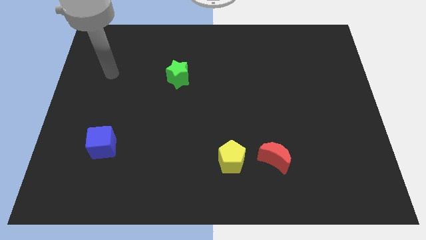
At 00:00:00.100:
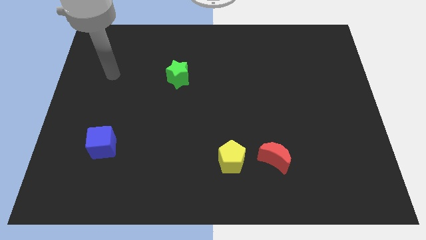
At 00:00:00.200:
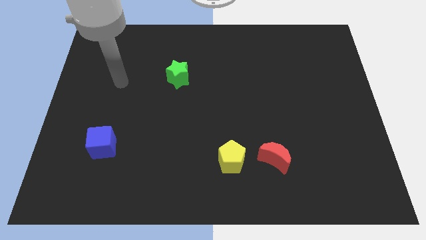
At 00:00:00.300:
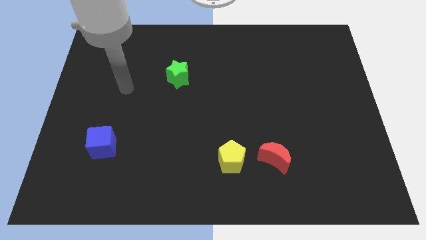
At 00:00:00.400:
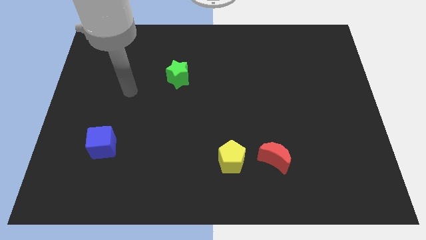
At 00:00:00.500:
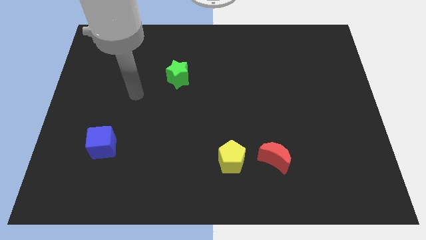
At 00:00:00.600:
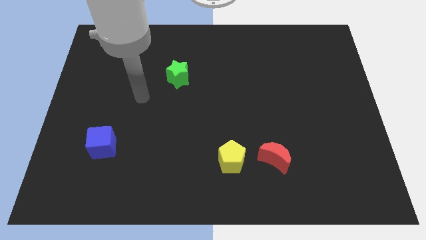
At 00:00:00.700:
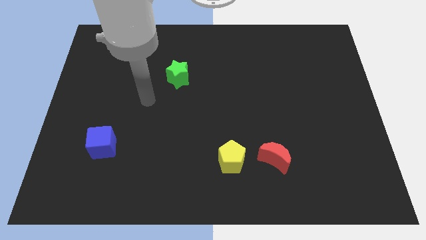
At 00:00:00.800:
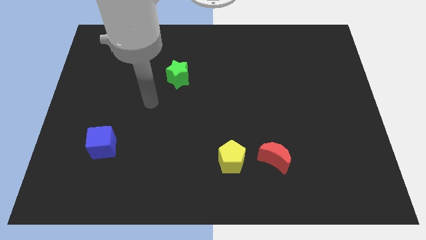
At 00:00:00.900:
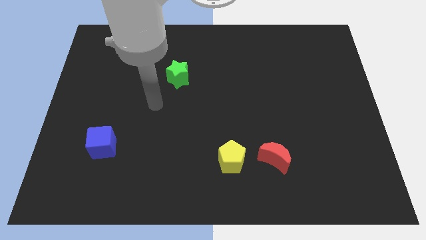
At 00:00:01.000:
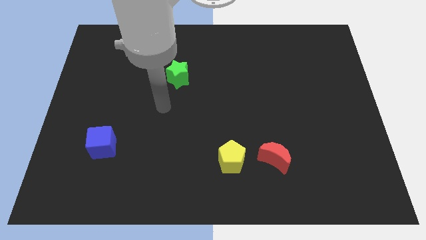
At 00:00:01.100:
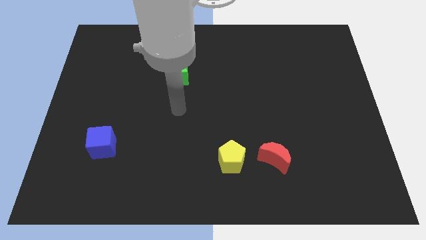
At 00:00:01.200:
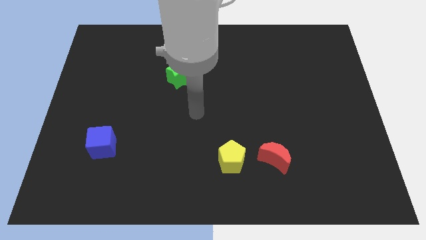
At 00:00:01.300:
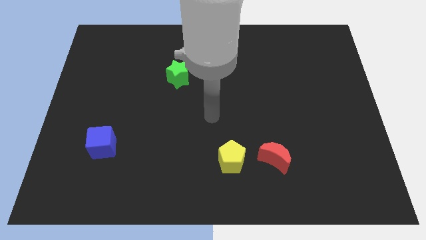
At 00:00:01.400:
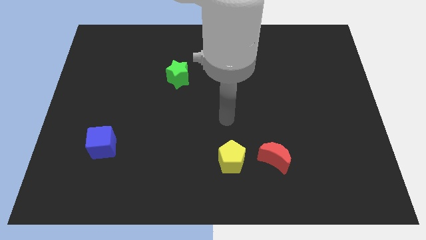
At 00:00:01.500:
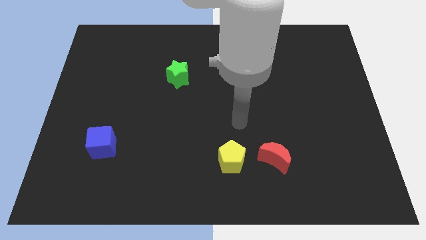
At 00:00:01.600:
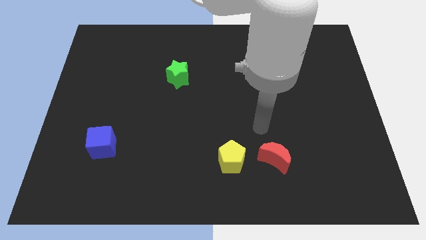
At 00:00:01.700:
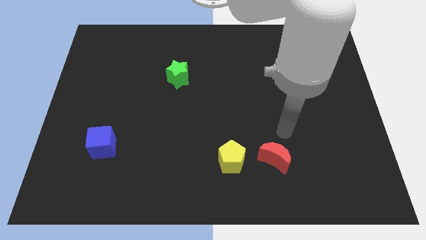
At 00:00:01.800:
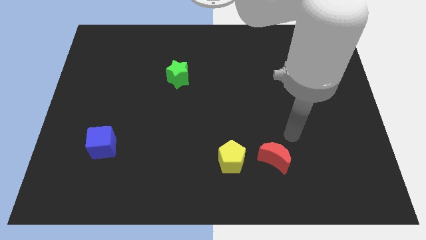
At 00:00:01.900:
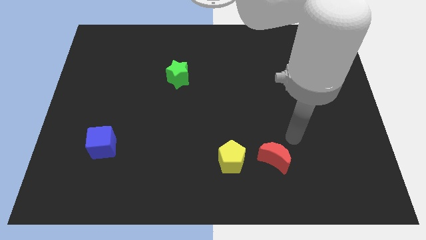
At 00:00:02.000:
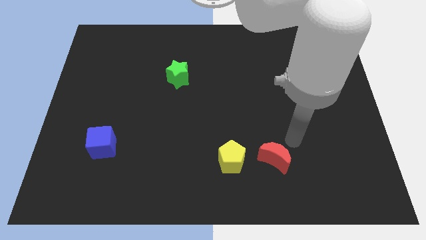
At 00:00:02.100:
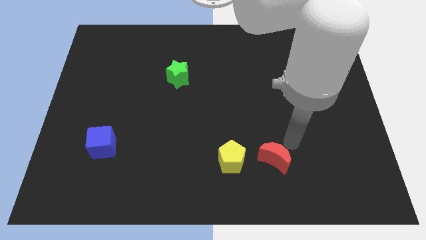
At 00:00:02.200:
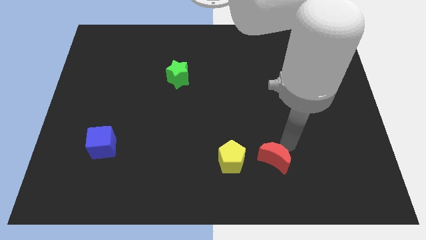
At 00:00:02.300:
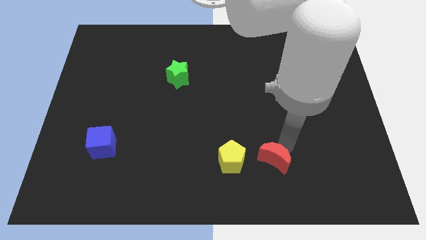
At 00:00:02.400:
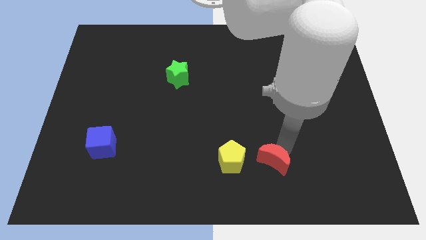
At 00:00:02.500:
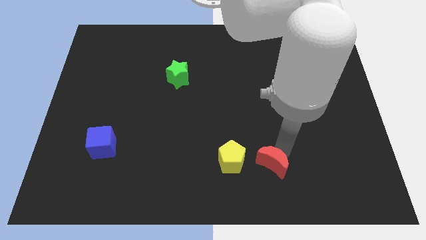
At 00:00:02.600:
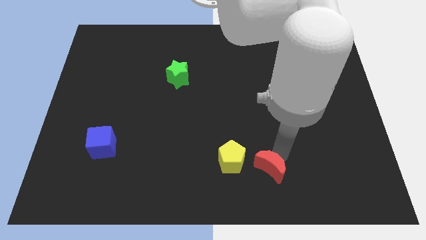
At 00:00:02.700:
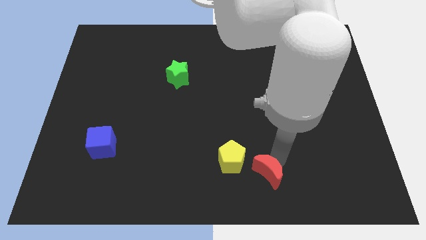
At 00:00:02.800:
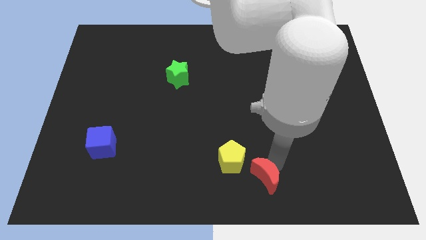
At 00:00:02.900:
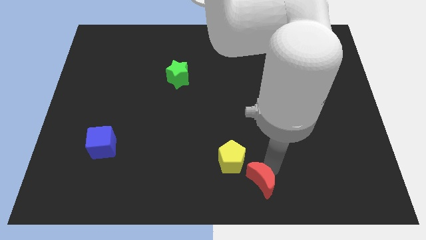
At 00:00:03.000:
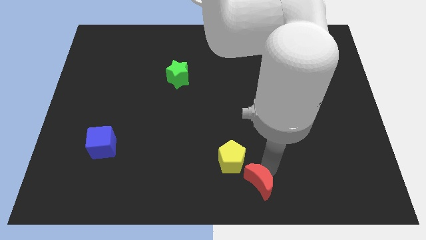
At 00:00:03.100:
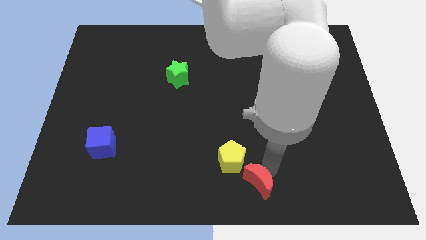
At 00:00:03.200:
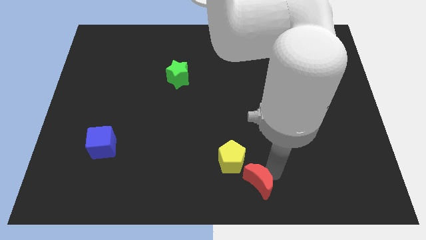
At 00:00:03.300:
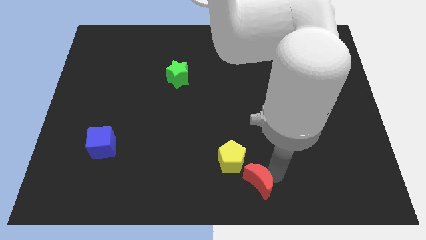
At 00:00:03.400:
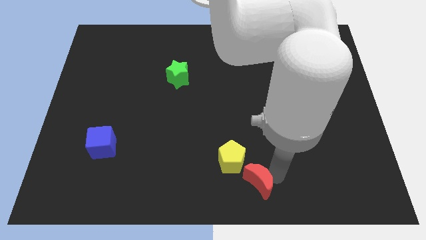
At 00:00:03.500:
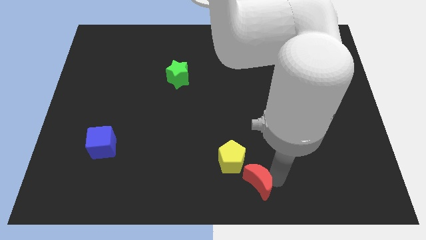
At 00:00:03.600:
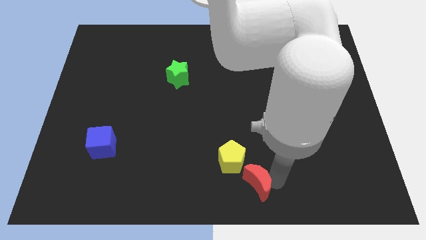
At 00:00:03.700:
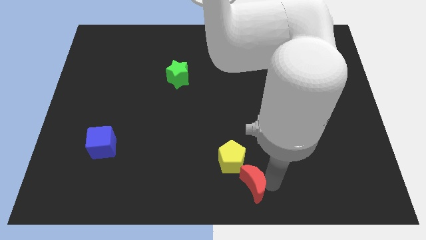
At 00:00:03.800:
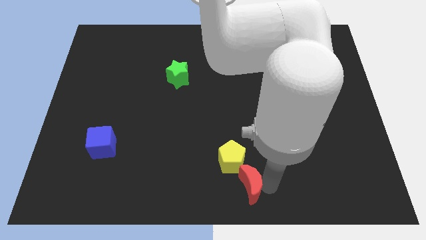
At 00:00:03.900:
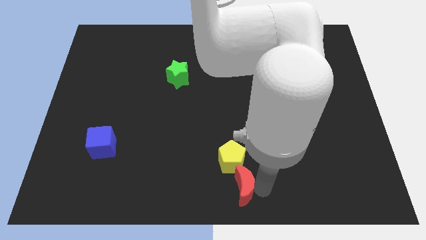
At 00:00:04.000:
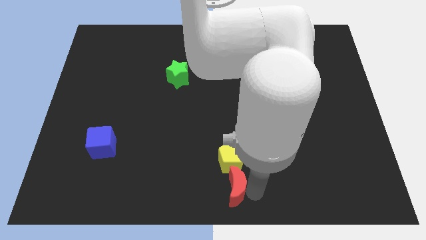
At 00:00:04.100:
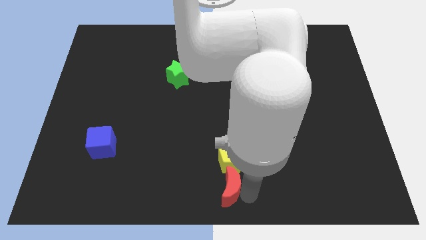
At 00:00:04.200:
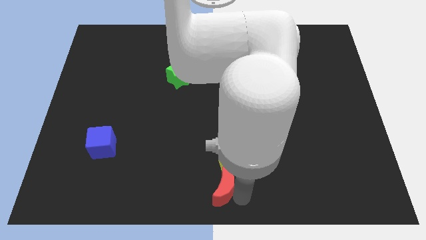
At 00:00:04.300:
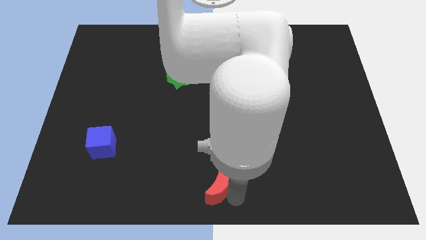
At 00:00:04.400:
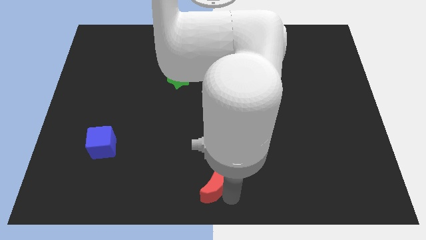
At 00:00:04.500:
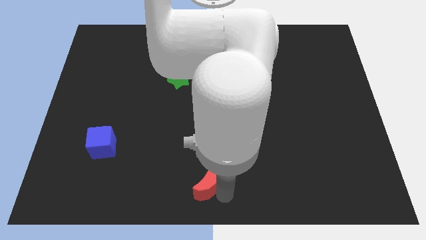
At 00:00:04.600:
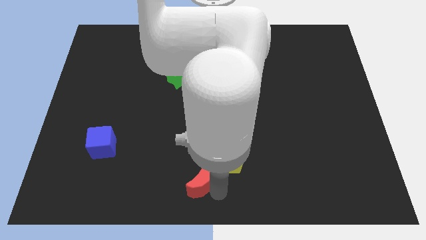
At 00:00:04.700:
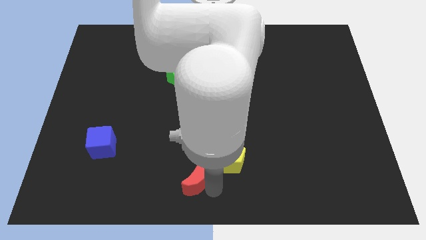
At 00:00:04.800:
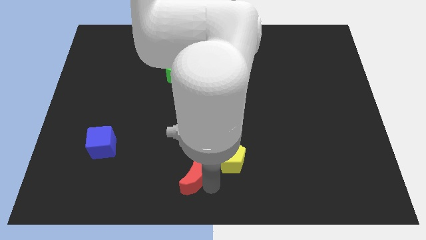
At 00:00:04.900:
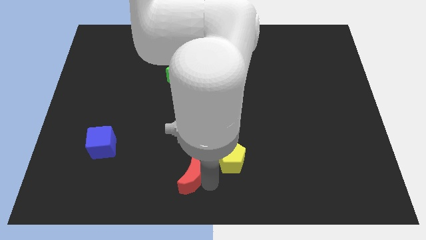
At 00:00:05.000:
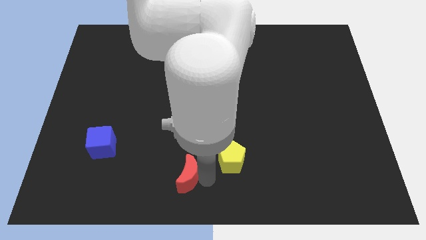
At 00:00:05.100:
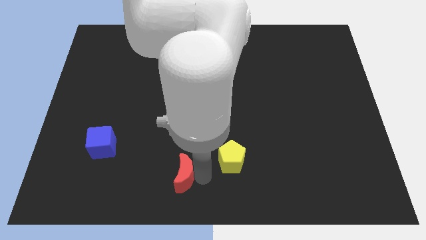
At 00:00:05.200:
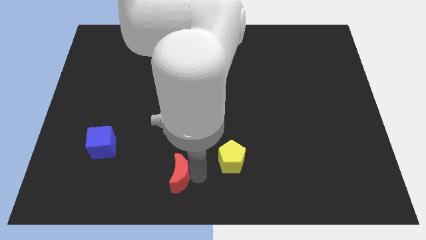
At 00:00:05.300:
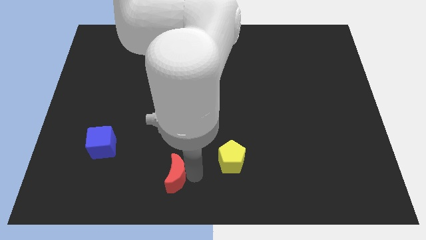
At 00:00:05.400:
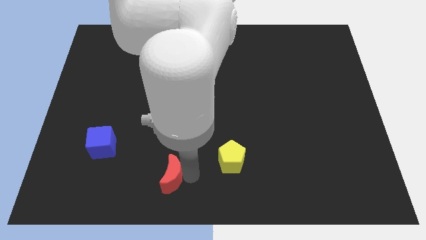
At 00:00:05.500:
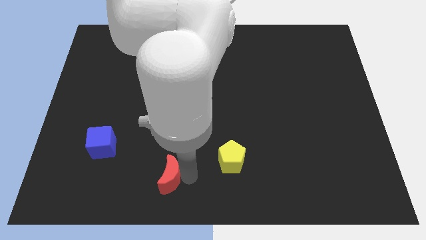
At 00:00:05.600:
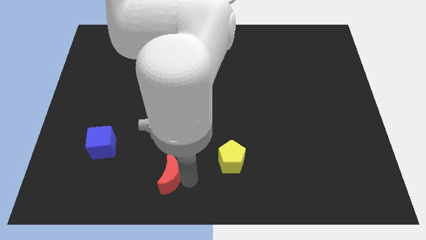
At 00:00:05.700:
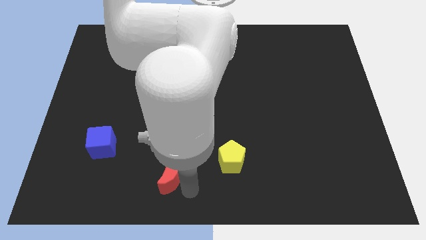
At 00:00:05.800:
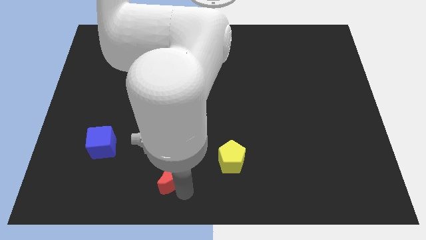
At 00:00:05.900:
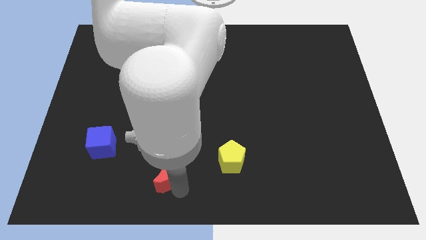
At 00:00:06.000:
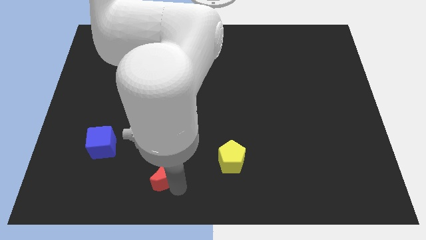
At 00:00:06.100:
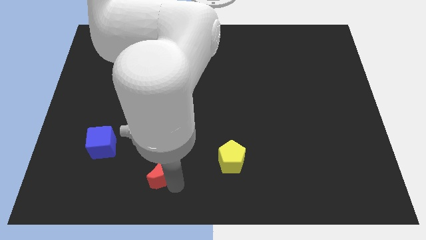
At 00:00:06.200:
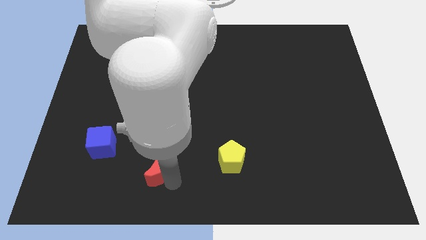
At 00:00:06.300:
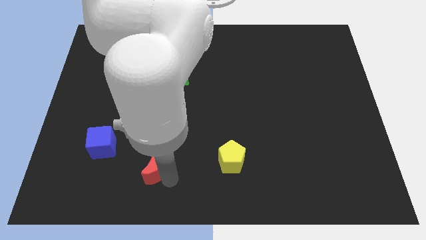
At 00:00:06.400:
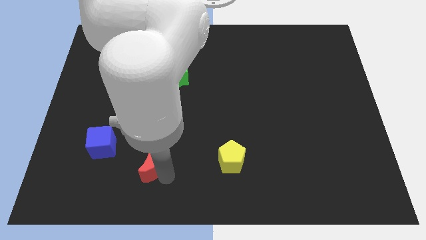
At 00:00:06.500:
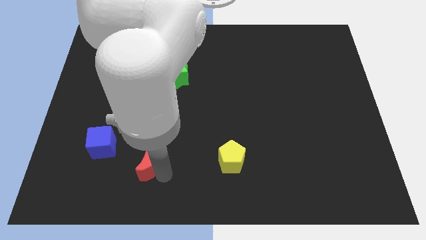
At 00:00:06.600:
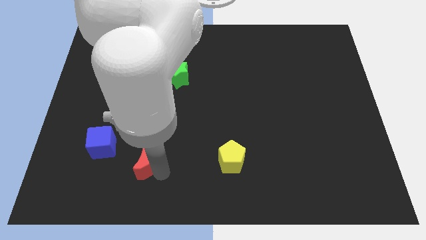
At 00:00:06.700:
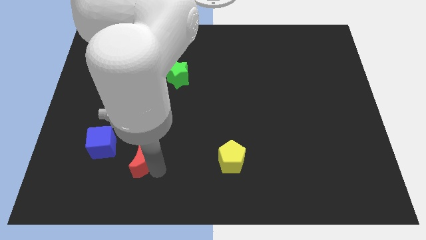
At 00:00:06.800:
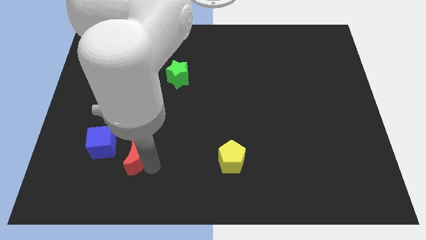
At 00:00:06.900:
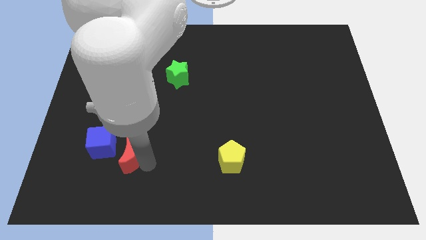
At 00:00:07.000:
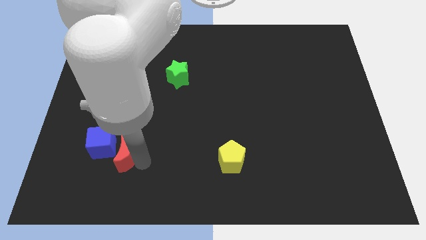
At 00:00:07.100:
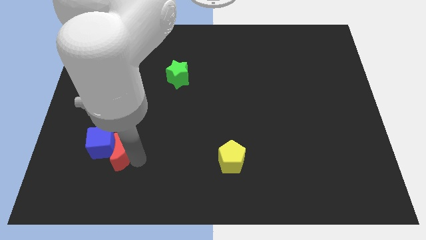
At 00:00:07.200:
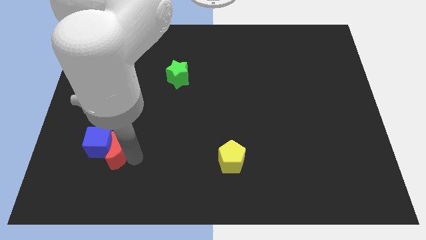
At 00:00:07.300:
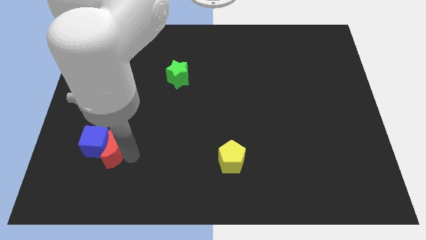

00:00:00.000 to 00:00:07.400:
put the moon close to the cube

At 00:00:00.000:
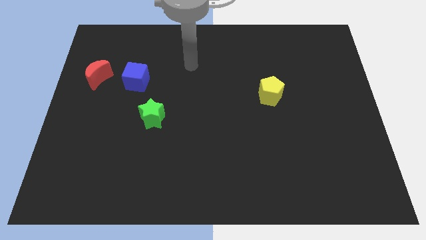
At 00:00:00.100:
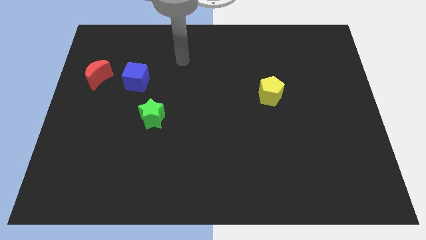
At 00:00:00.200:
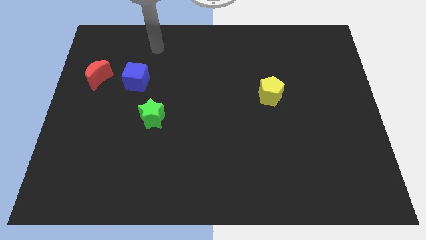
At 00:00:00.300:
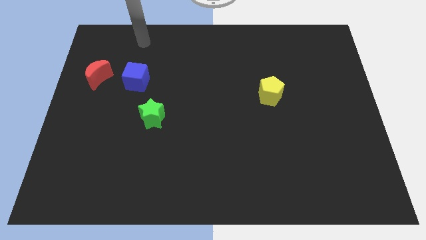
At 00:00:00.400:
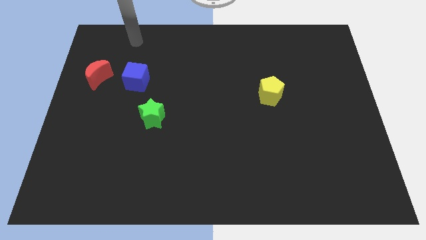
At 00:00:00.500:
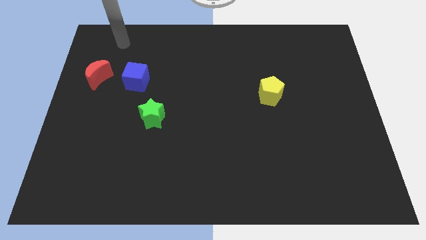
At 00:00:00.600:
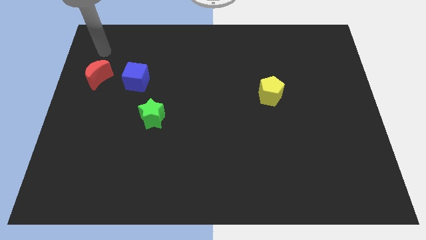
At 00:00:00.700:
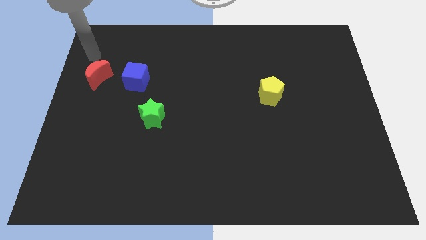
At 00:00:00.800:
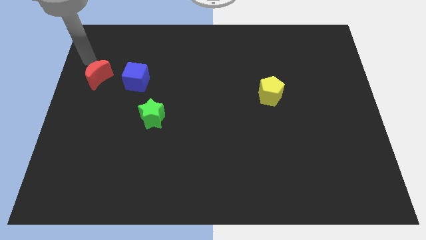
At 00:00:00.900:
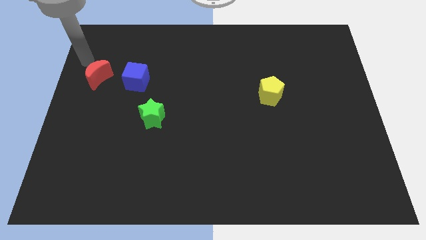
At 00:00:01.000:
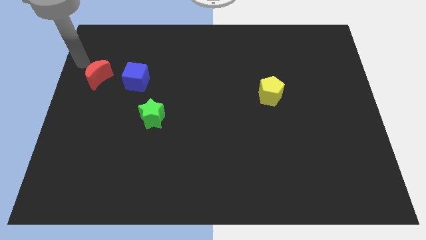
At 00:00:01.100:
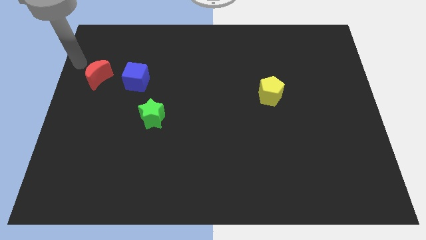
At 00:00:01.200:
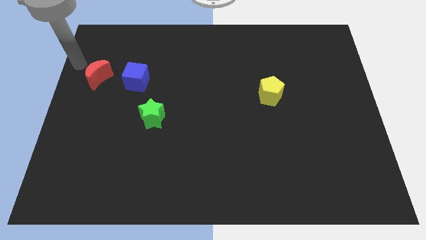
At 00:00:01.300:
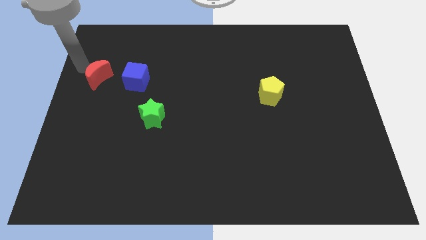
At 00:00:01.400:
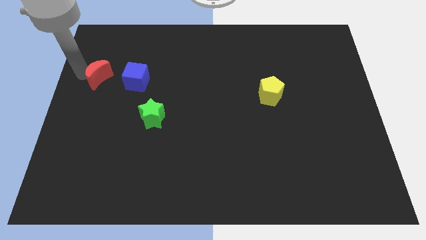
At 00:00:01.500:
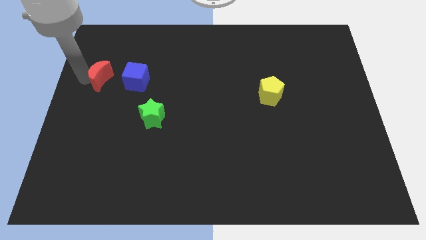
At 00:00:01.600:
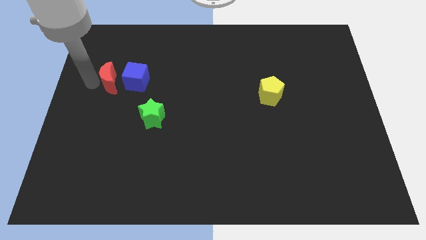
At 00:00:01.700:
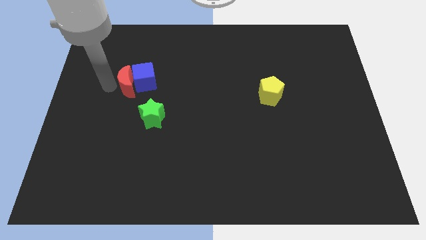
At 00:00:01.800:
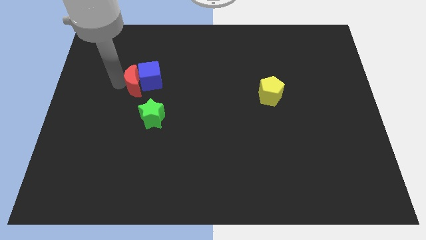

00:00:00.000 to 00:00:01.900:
push the red moon towards the blue cube
